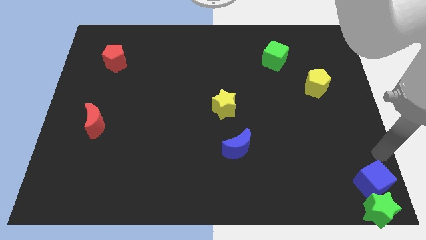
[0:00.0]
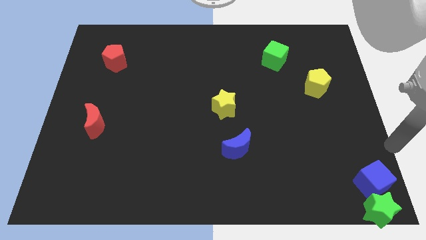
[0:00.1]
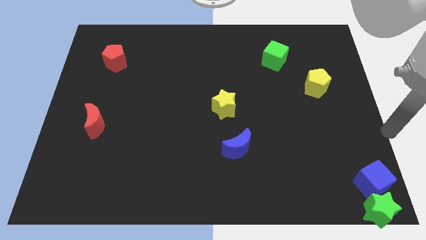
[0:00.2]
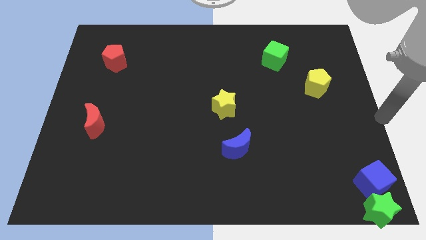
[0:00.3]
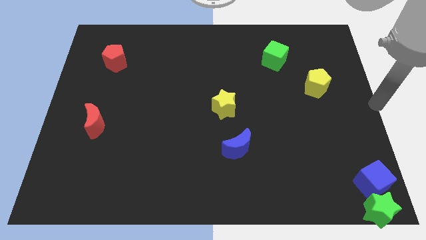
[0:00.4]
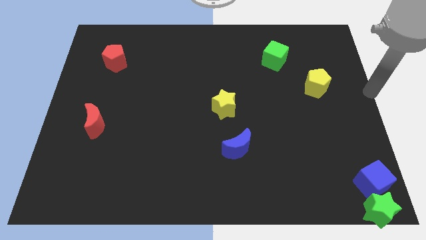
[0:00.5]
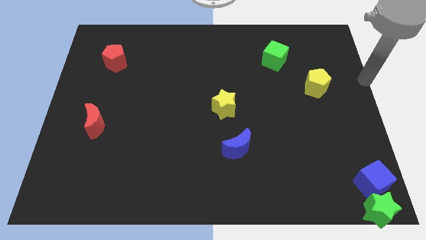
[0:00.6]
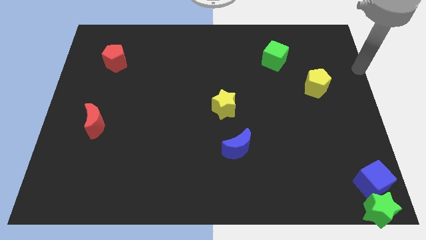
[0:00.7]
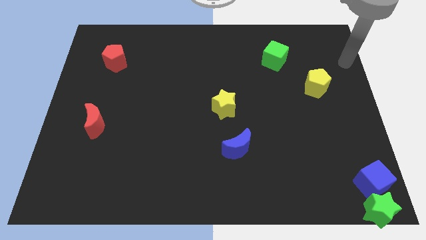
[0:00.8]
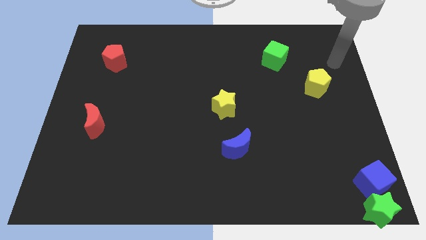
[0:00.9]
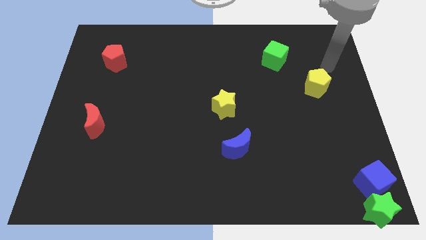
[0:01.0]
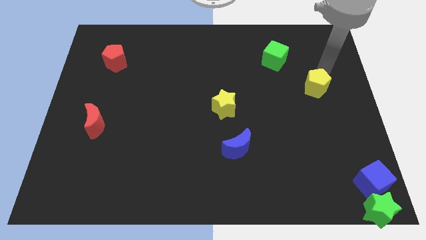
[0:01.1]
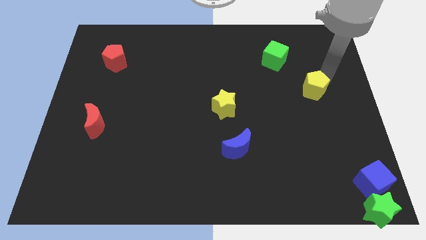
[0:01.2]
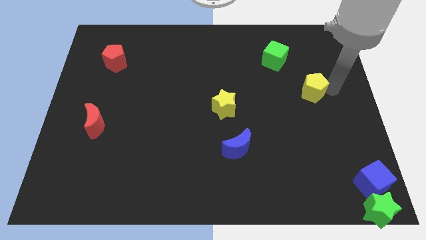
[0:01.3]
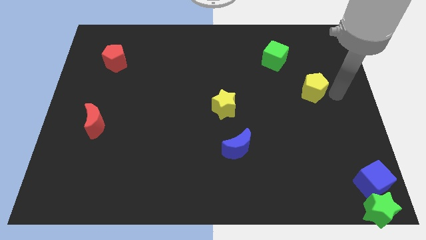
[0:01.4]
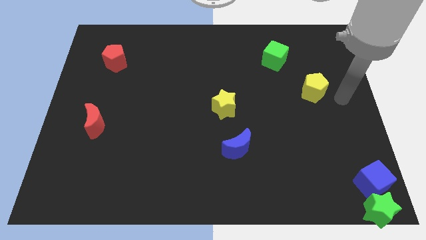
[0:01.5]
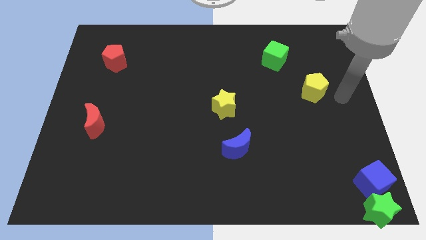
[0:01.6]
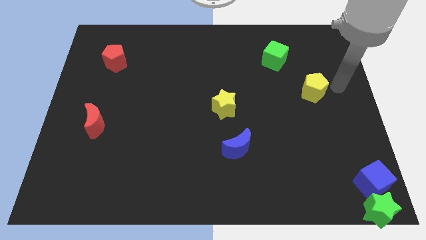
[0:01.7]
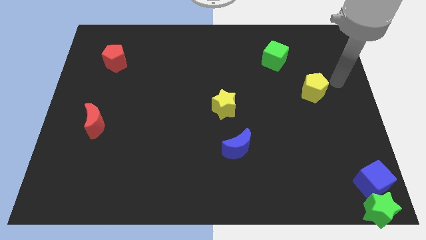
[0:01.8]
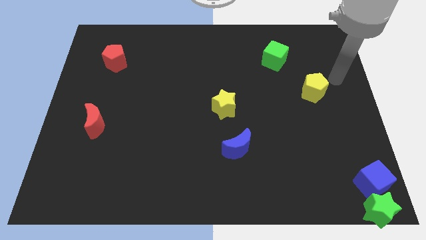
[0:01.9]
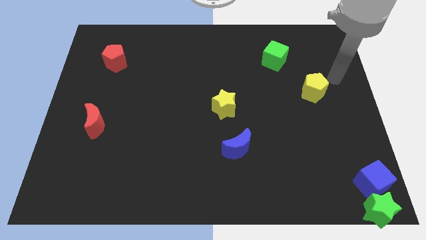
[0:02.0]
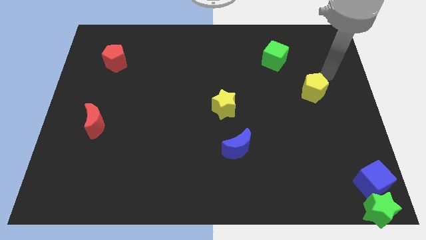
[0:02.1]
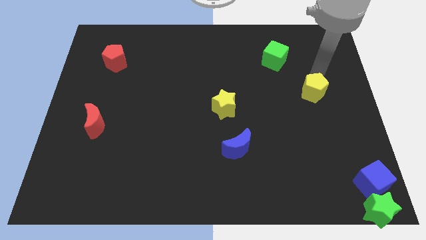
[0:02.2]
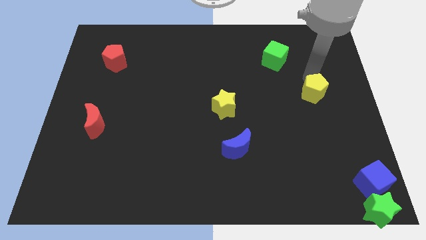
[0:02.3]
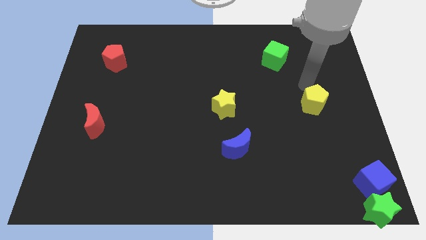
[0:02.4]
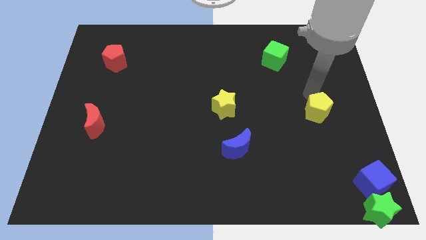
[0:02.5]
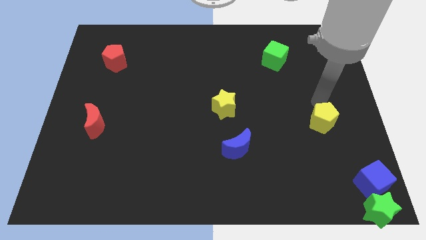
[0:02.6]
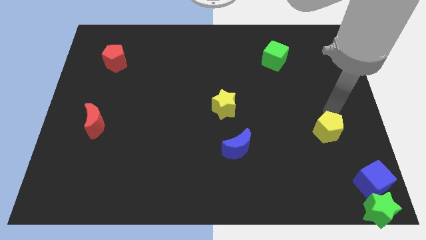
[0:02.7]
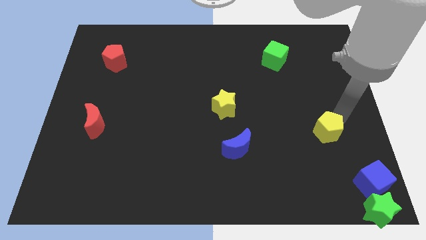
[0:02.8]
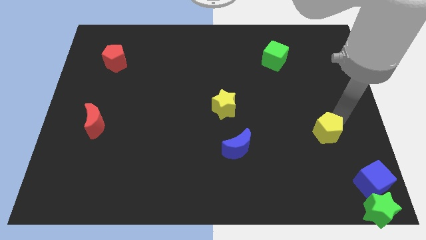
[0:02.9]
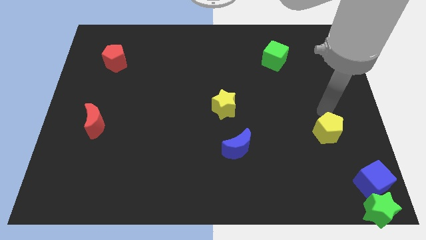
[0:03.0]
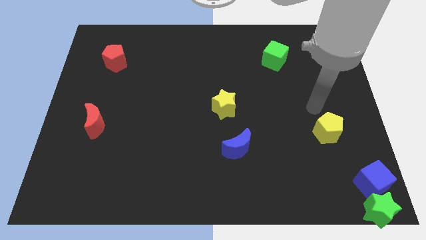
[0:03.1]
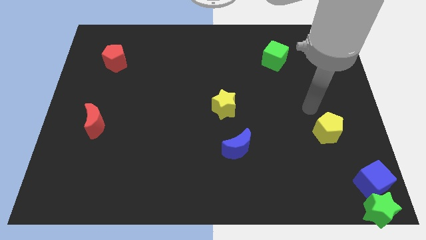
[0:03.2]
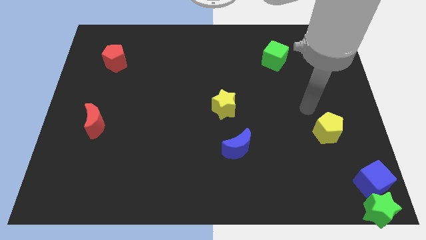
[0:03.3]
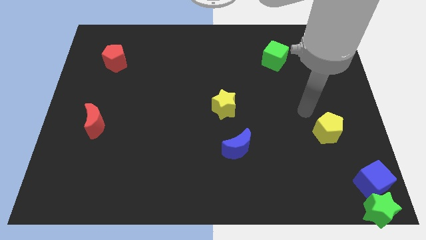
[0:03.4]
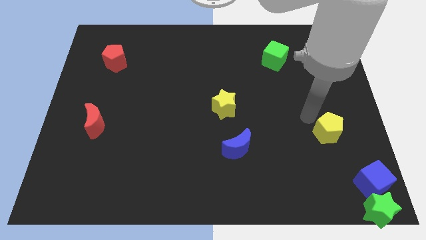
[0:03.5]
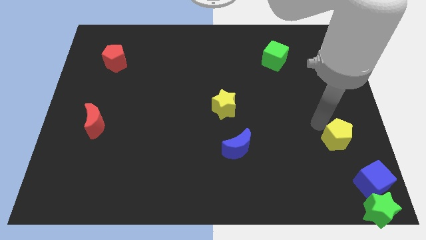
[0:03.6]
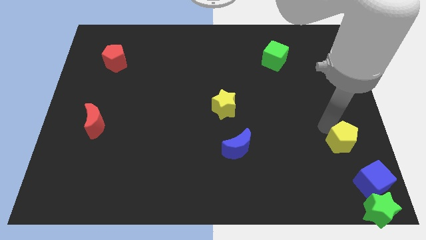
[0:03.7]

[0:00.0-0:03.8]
drag the yellow pentagon towards the blue cube

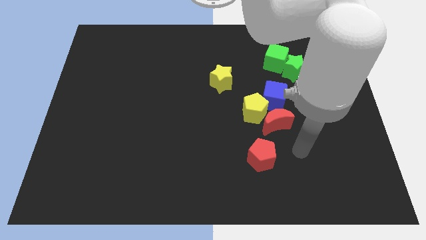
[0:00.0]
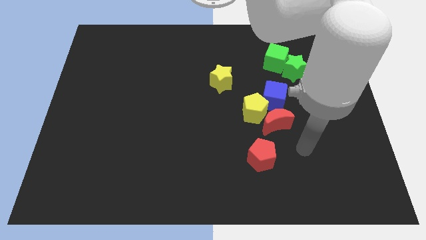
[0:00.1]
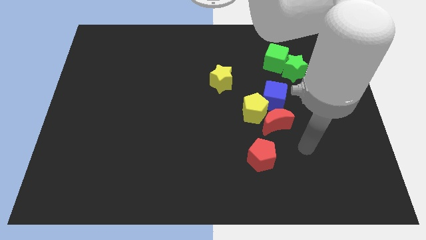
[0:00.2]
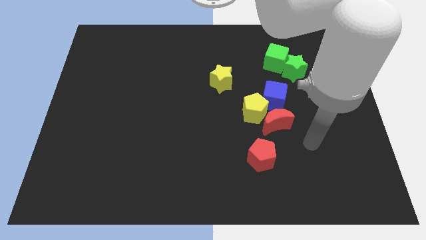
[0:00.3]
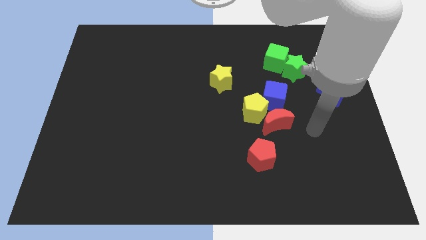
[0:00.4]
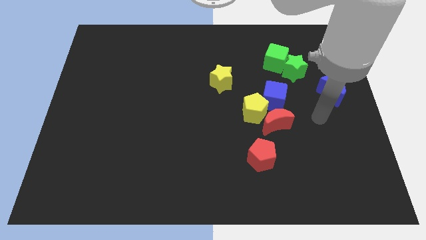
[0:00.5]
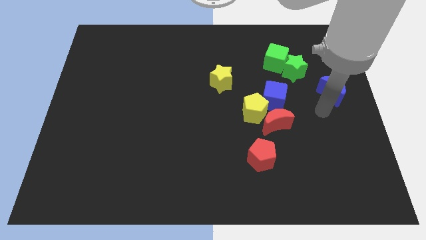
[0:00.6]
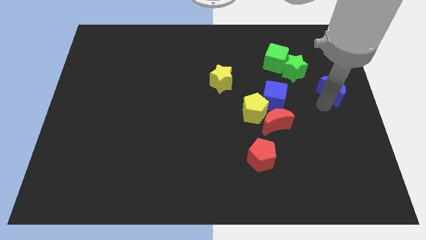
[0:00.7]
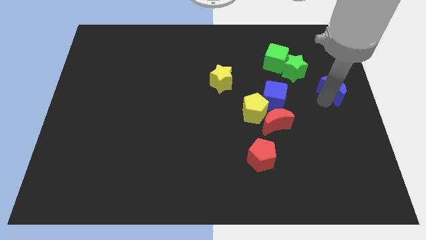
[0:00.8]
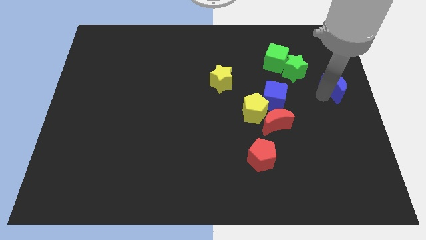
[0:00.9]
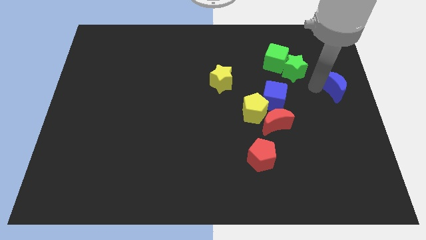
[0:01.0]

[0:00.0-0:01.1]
slide your arm to the top left of blue moon

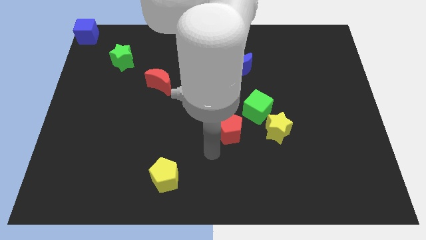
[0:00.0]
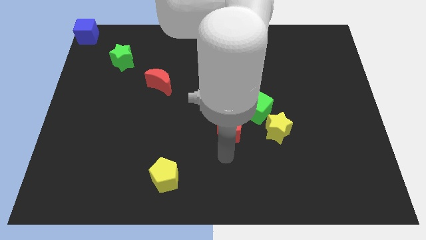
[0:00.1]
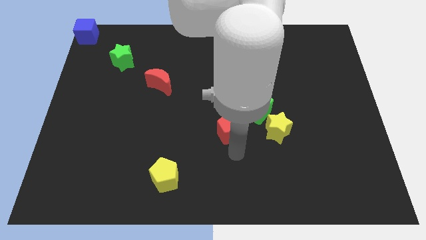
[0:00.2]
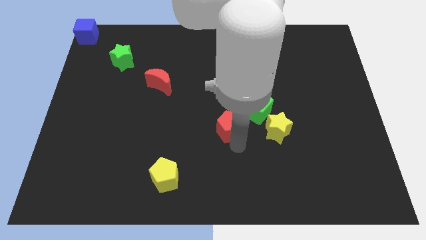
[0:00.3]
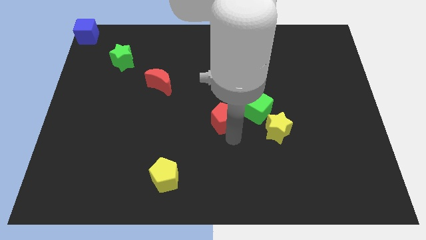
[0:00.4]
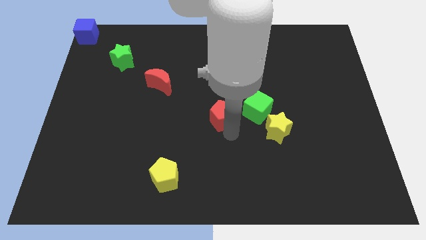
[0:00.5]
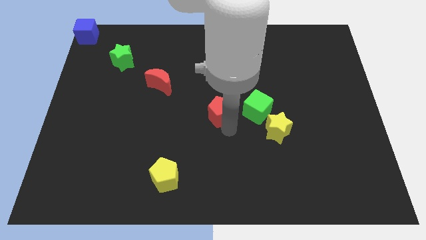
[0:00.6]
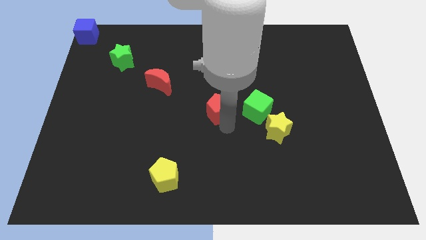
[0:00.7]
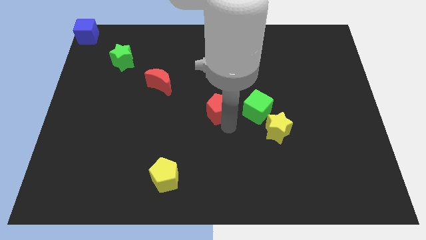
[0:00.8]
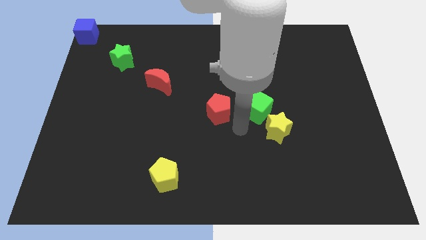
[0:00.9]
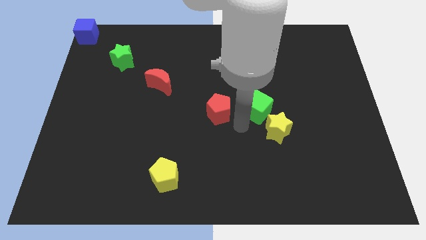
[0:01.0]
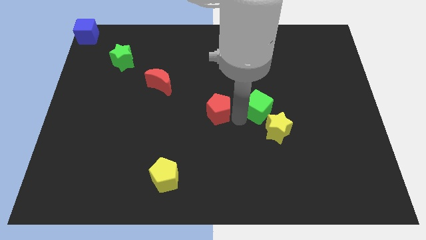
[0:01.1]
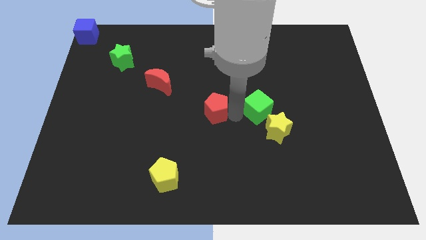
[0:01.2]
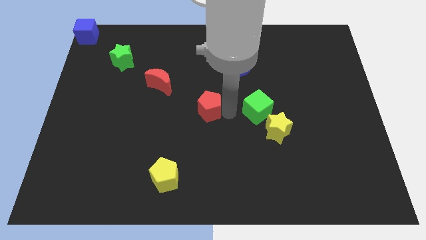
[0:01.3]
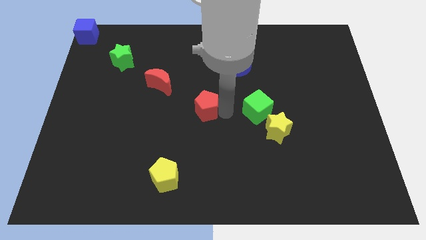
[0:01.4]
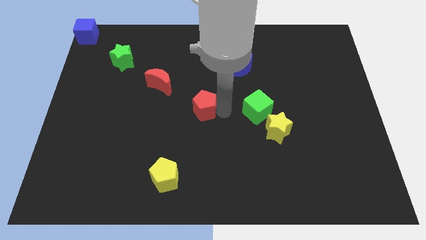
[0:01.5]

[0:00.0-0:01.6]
move the red pentagon to the parallel left of the green cube

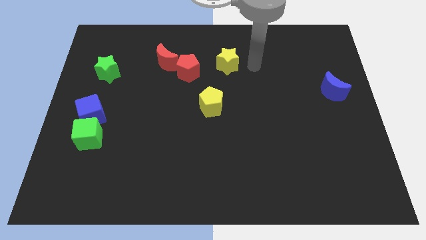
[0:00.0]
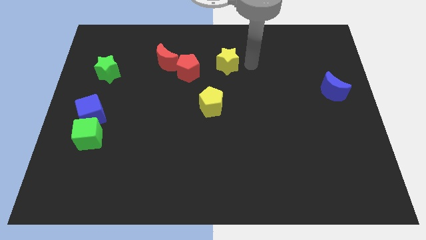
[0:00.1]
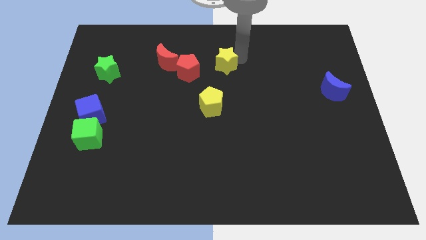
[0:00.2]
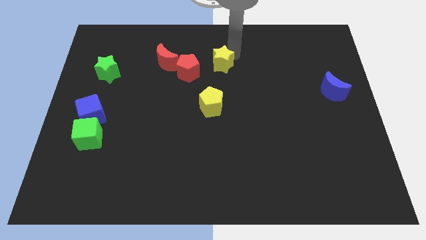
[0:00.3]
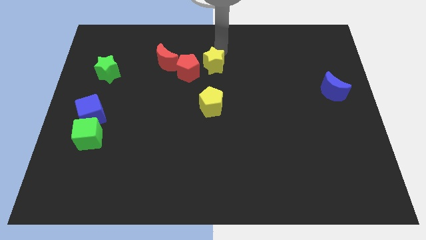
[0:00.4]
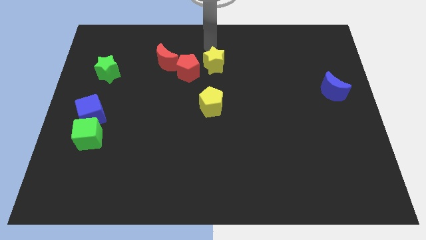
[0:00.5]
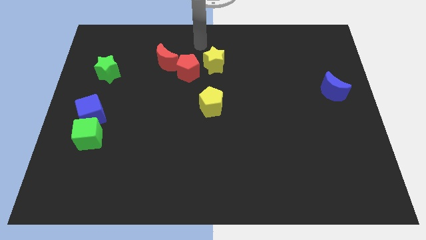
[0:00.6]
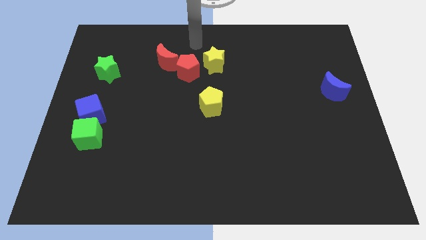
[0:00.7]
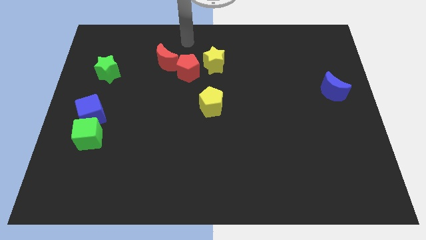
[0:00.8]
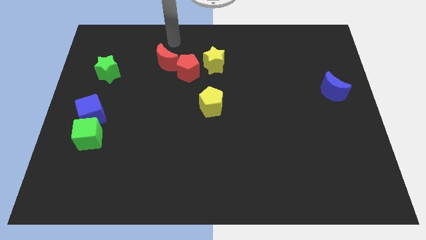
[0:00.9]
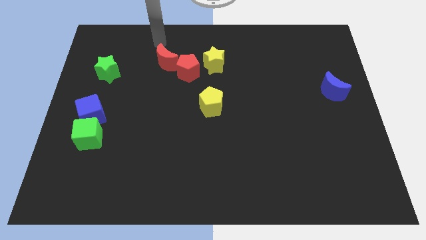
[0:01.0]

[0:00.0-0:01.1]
push yellow star towards red pentagon

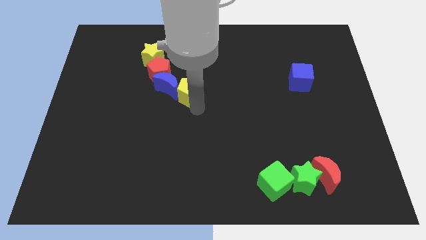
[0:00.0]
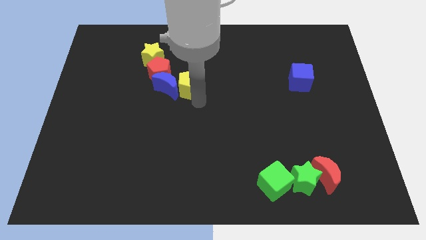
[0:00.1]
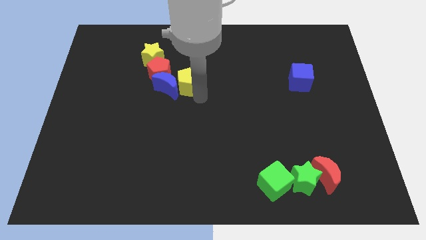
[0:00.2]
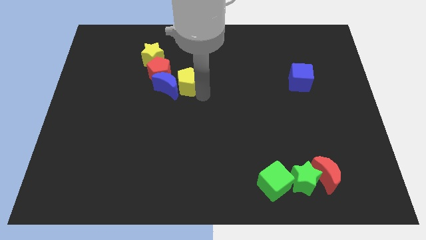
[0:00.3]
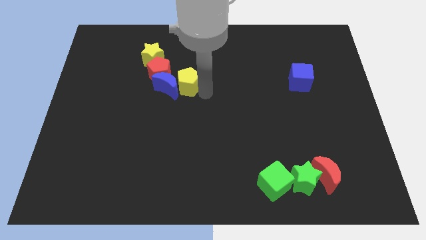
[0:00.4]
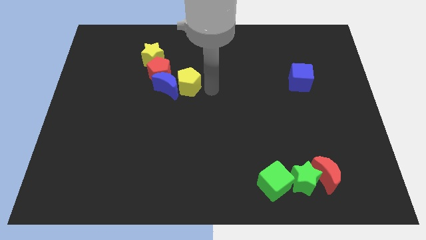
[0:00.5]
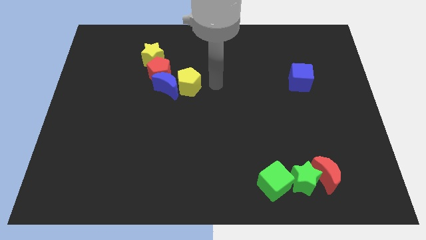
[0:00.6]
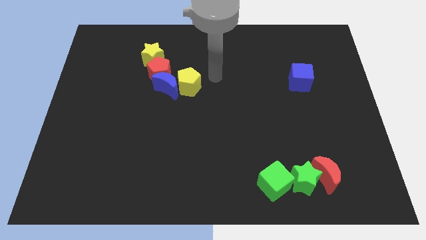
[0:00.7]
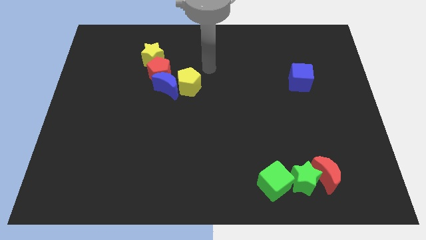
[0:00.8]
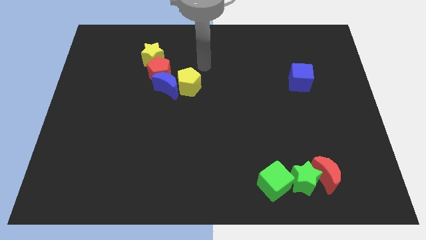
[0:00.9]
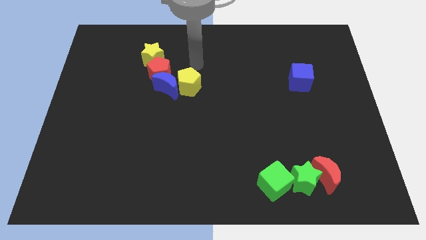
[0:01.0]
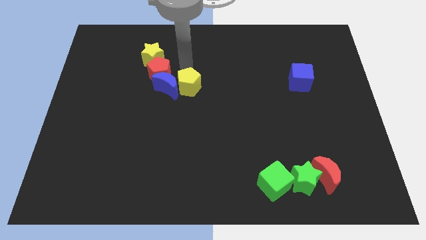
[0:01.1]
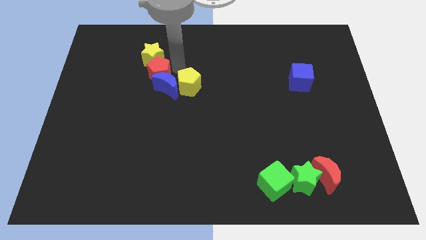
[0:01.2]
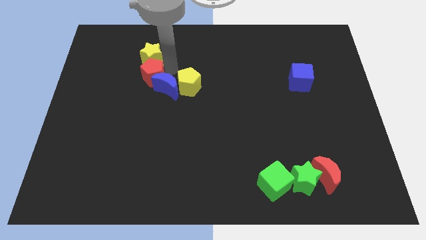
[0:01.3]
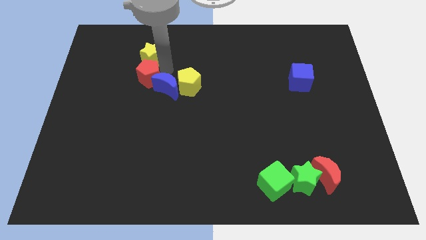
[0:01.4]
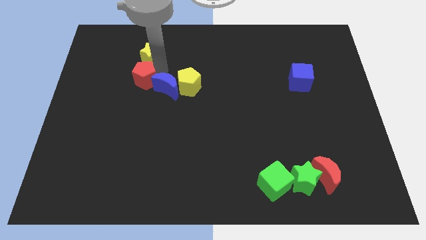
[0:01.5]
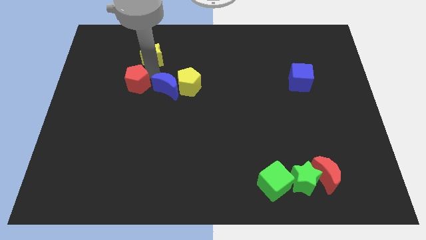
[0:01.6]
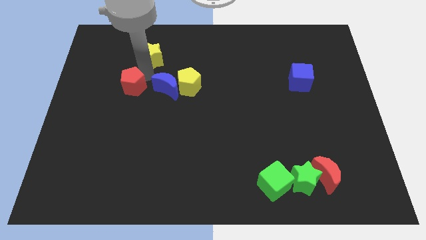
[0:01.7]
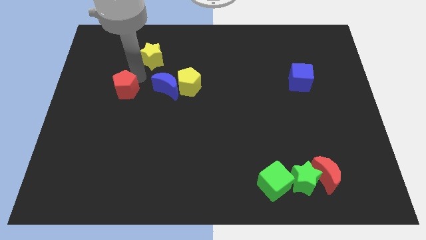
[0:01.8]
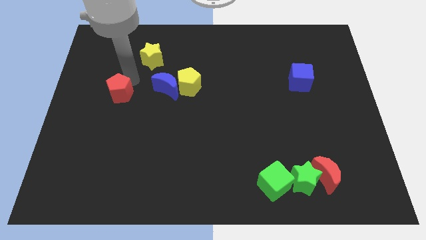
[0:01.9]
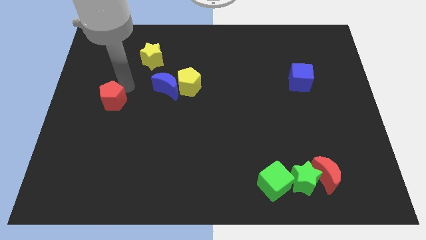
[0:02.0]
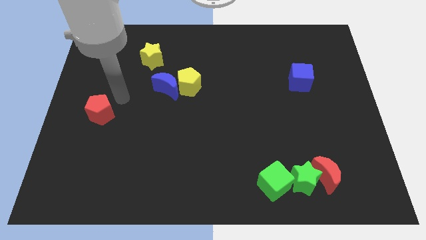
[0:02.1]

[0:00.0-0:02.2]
separate the red pentagon from the yellow star
